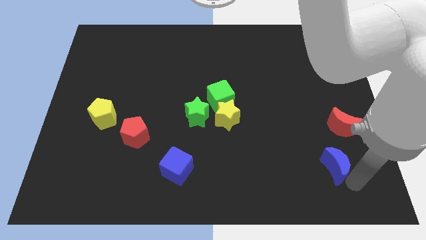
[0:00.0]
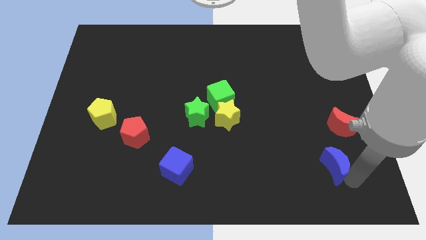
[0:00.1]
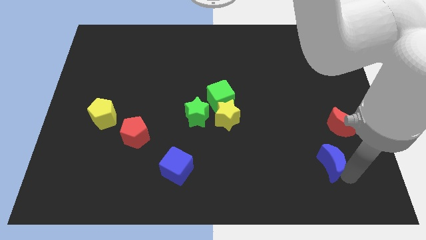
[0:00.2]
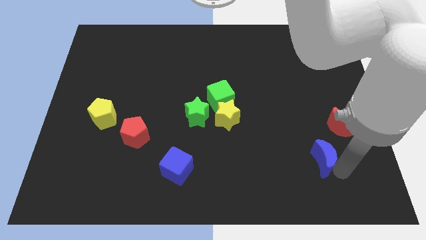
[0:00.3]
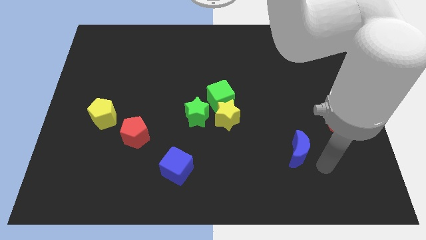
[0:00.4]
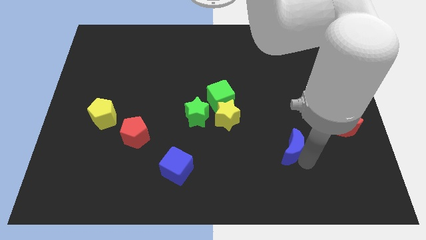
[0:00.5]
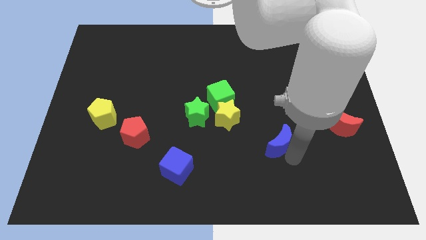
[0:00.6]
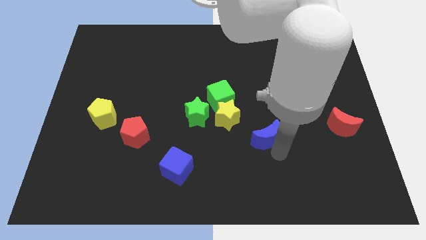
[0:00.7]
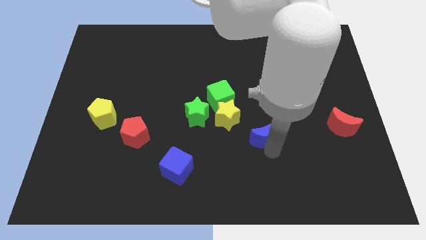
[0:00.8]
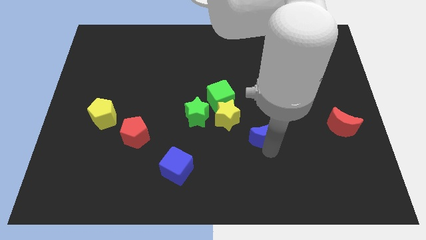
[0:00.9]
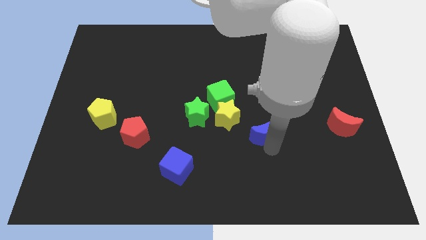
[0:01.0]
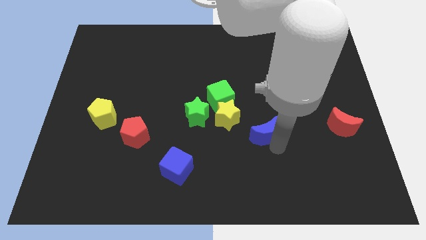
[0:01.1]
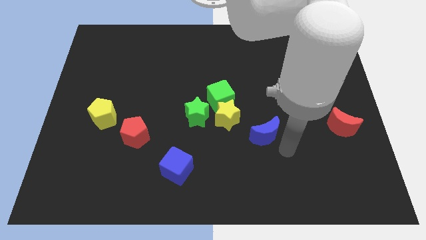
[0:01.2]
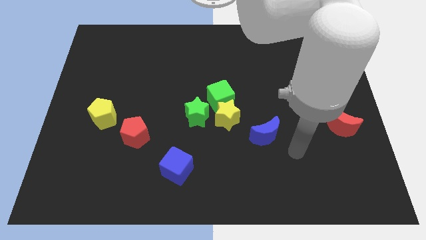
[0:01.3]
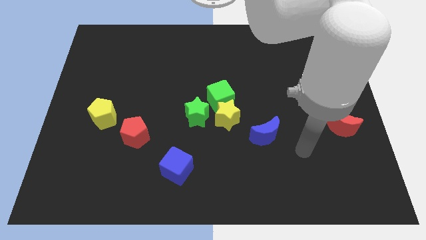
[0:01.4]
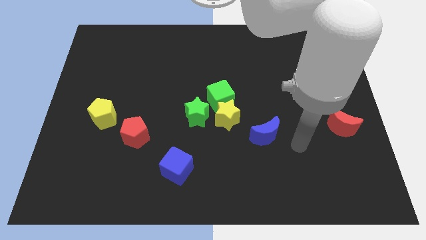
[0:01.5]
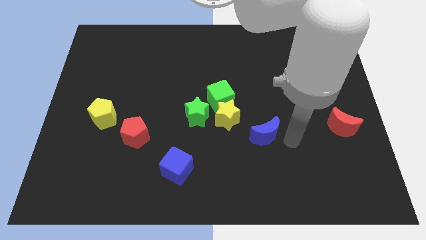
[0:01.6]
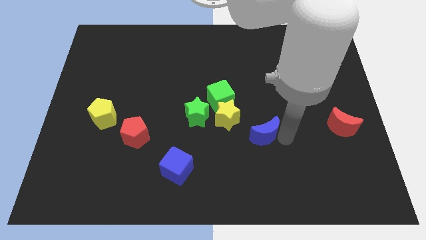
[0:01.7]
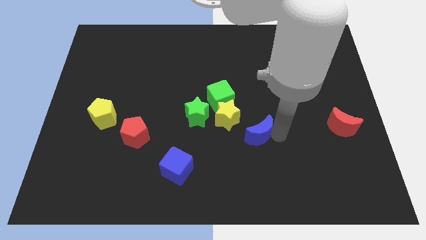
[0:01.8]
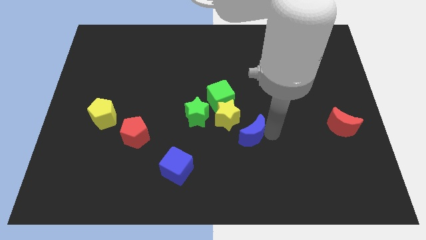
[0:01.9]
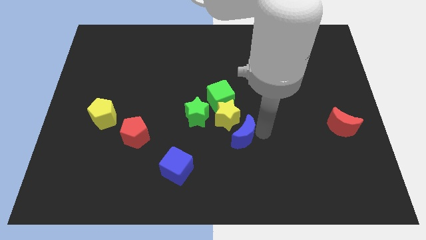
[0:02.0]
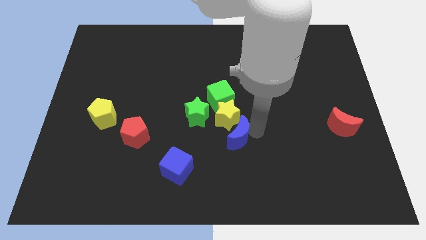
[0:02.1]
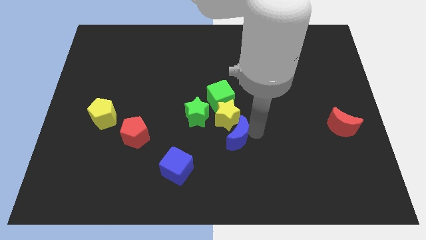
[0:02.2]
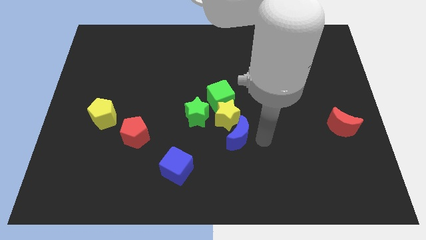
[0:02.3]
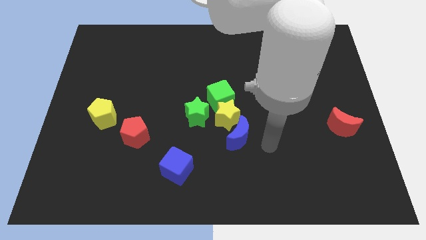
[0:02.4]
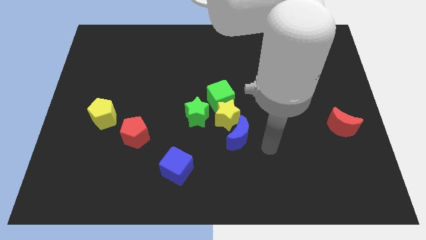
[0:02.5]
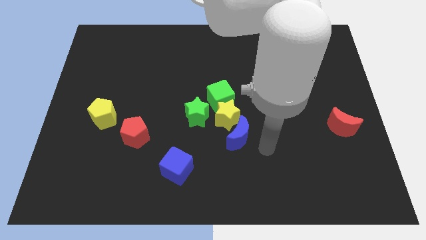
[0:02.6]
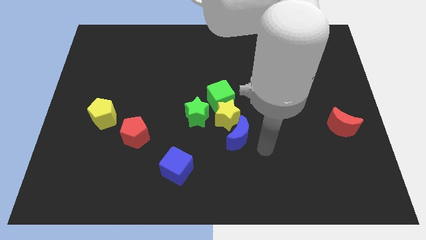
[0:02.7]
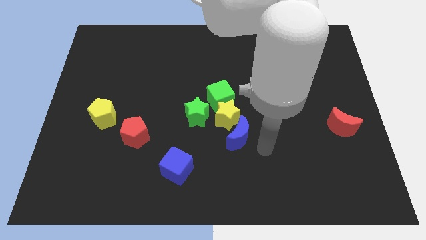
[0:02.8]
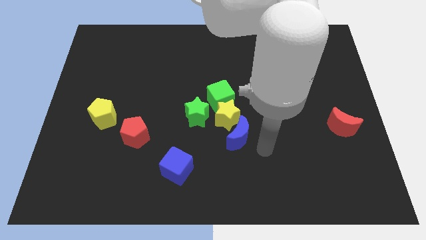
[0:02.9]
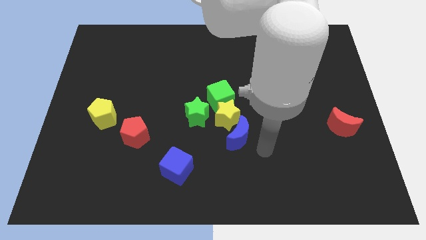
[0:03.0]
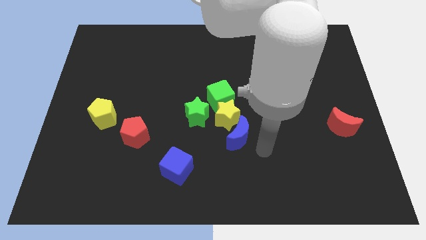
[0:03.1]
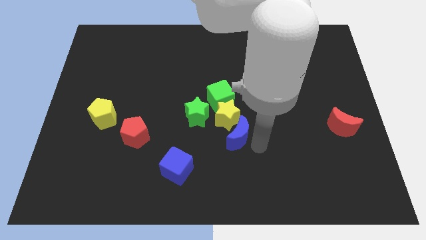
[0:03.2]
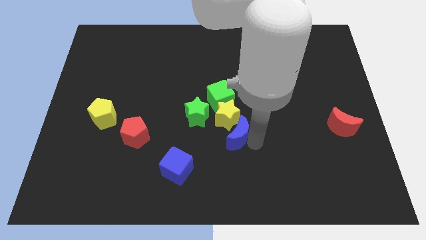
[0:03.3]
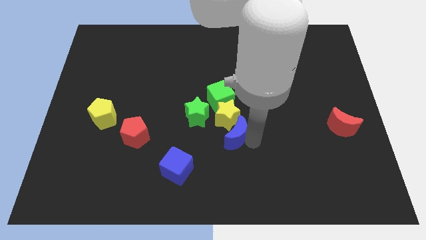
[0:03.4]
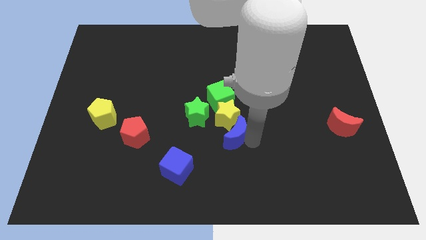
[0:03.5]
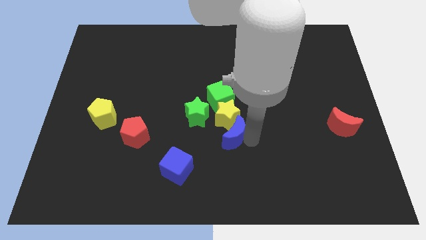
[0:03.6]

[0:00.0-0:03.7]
push the blue moon and place it close to the yellow star

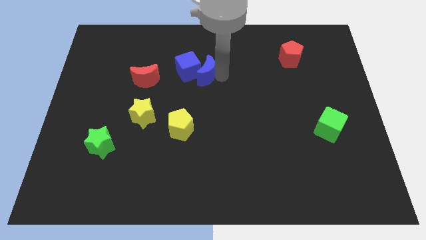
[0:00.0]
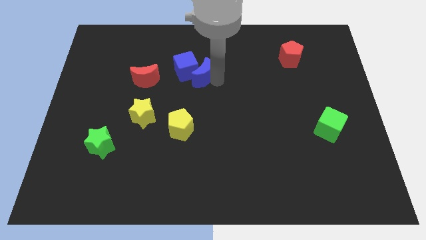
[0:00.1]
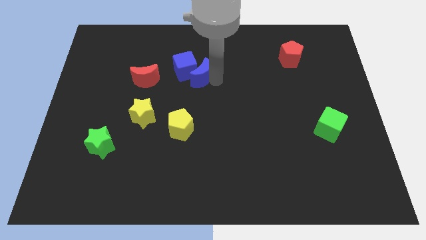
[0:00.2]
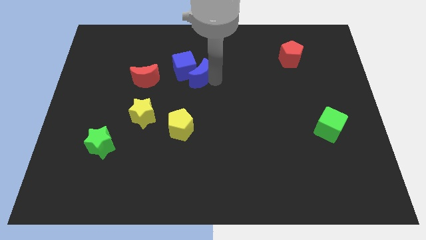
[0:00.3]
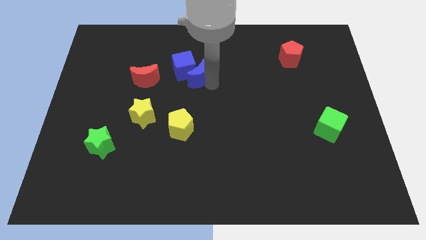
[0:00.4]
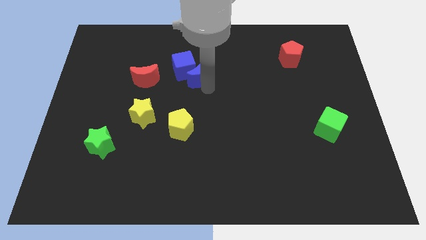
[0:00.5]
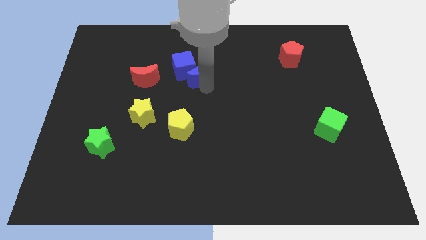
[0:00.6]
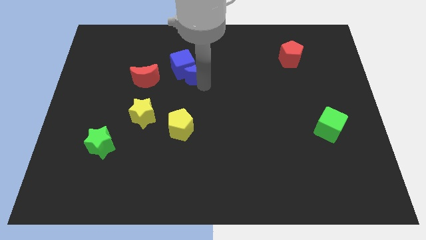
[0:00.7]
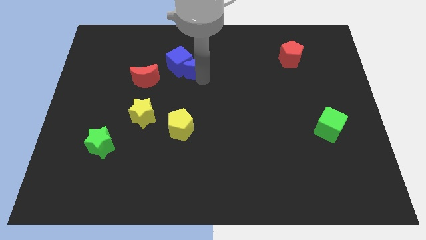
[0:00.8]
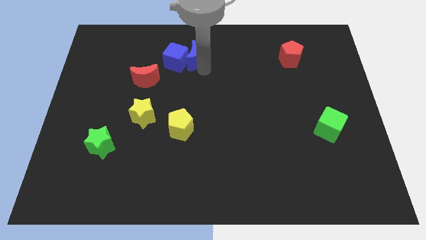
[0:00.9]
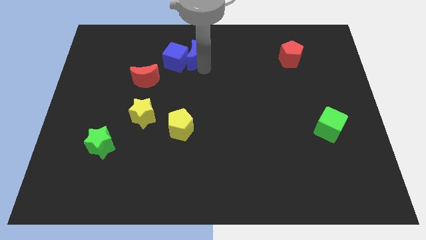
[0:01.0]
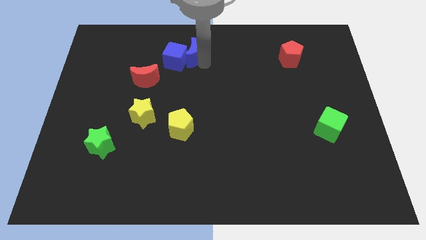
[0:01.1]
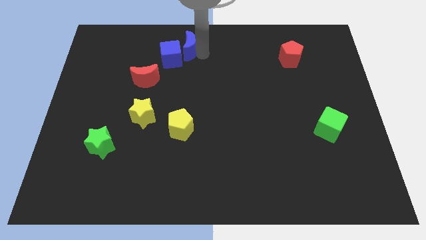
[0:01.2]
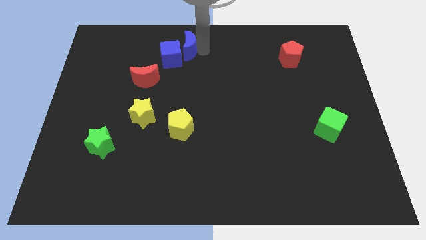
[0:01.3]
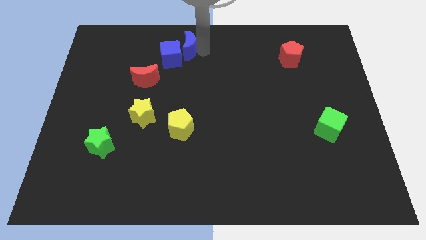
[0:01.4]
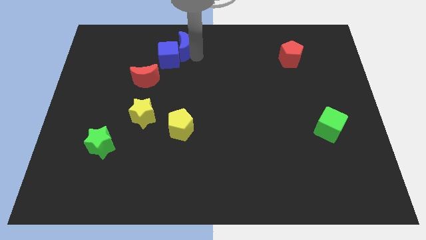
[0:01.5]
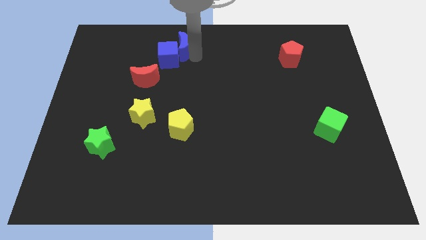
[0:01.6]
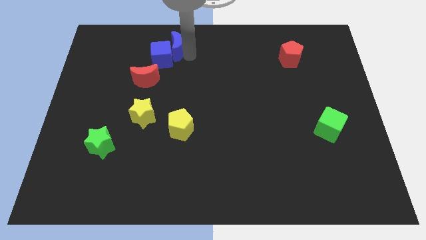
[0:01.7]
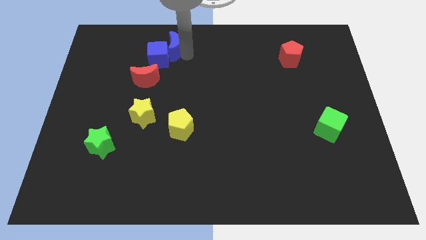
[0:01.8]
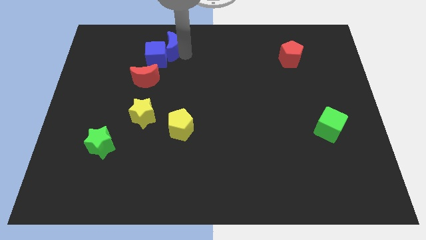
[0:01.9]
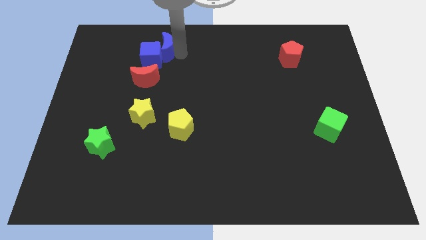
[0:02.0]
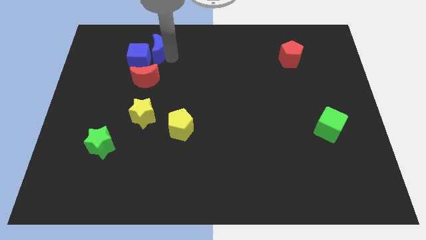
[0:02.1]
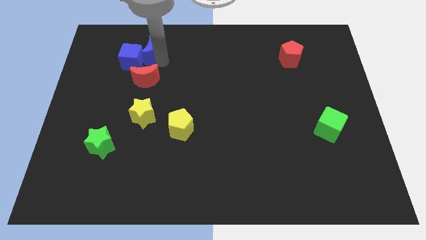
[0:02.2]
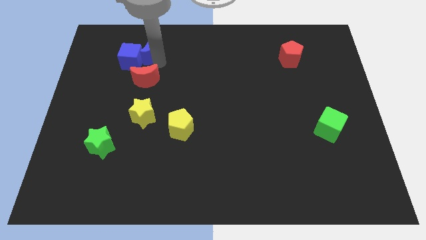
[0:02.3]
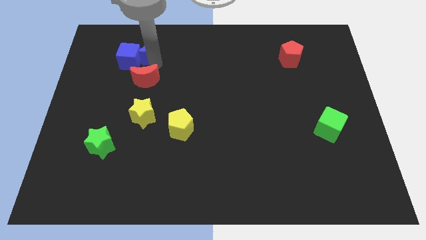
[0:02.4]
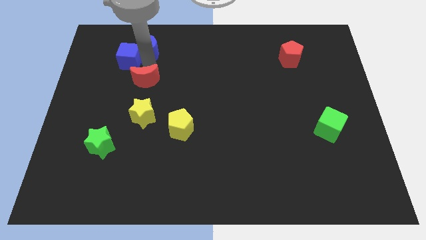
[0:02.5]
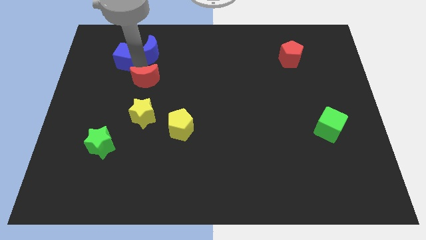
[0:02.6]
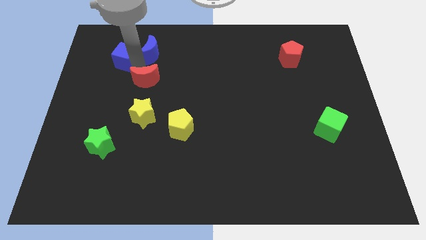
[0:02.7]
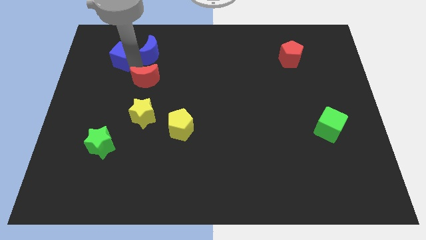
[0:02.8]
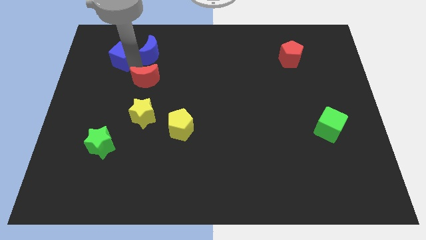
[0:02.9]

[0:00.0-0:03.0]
move the blue blocks to the top of the red crescent

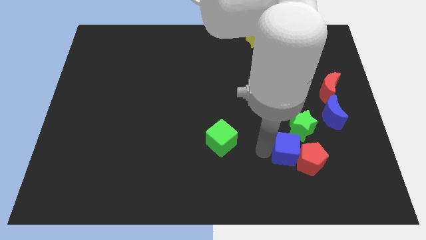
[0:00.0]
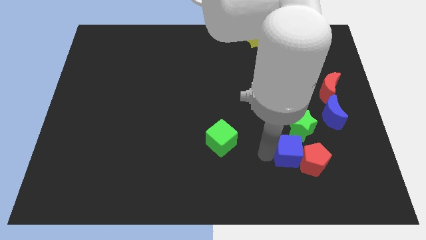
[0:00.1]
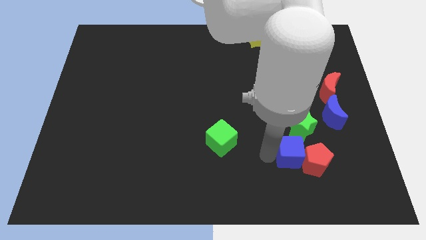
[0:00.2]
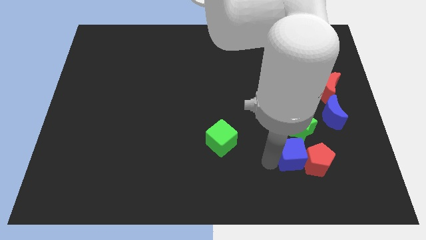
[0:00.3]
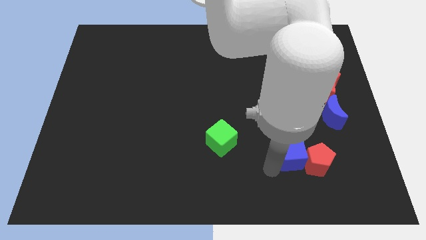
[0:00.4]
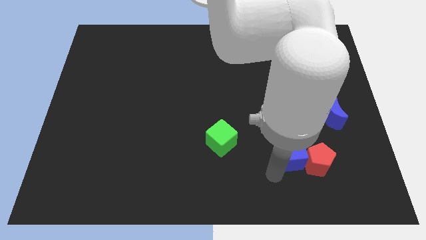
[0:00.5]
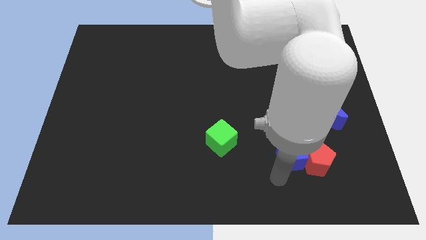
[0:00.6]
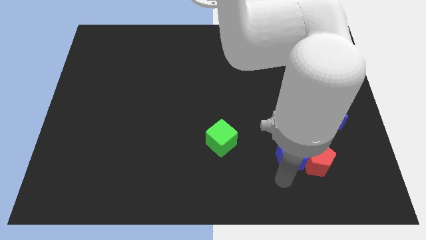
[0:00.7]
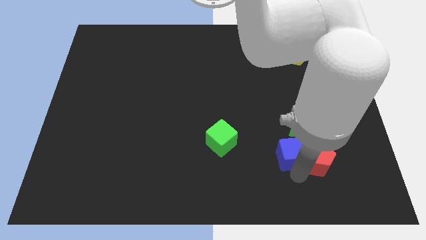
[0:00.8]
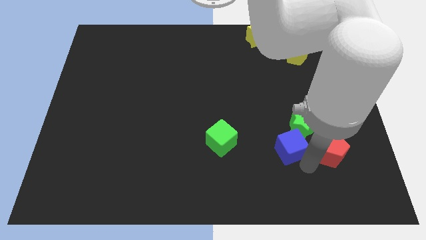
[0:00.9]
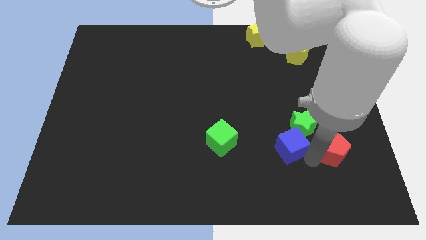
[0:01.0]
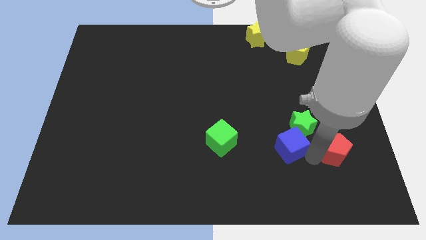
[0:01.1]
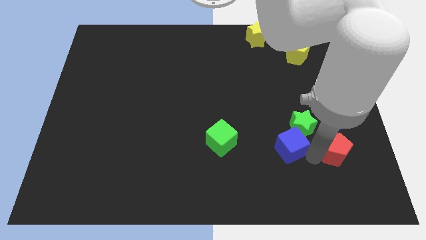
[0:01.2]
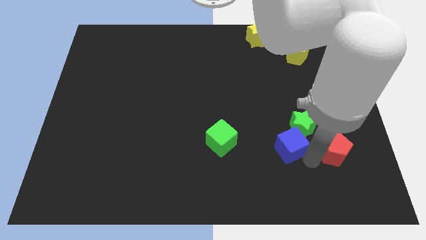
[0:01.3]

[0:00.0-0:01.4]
place your hand in between the blue cube and the red pentagon

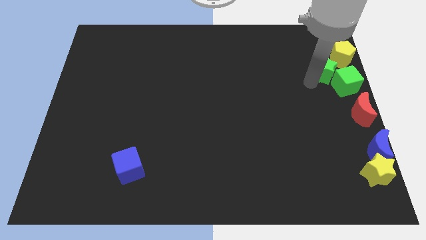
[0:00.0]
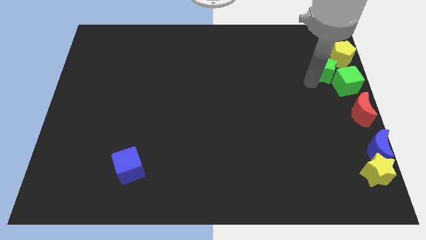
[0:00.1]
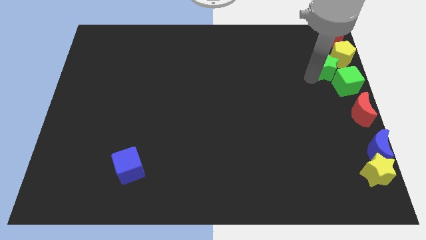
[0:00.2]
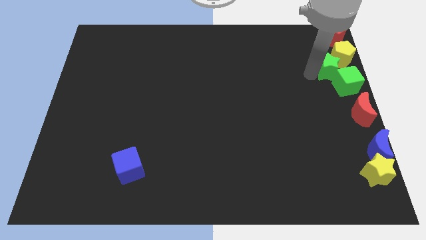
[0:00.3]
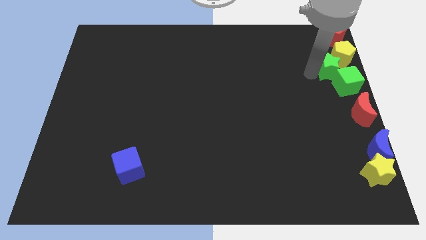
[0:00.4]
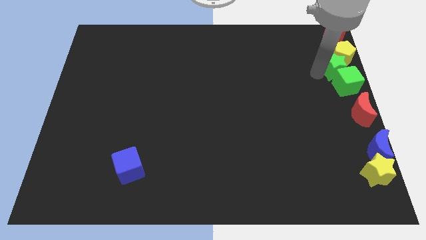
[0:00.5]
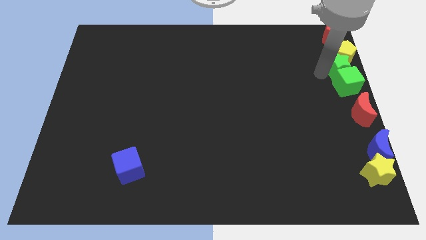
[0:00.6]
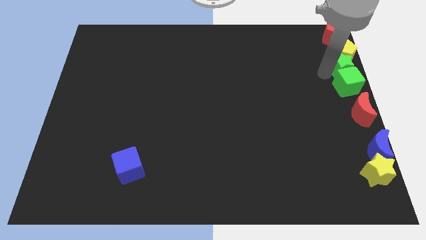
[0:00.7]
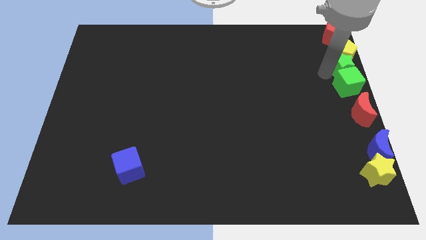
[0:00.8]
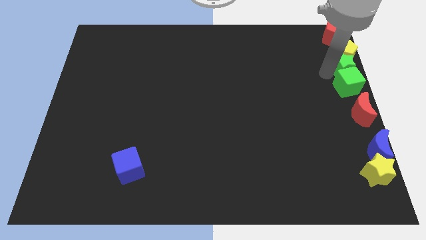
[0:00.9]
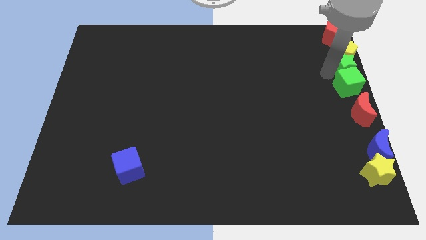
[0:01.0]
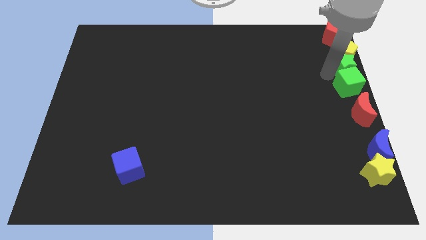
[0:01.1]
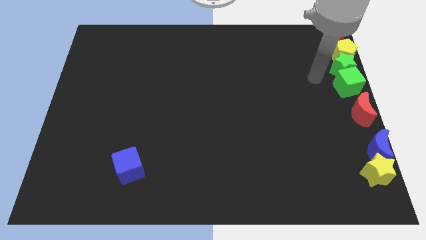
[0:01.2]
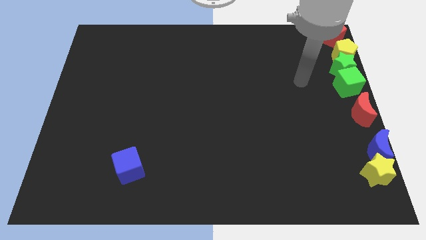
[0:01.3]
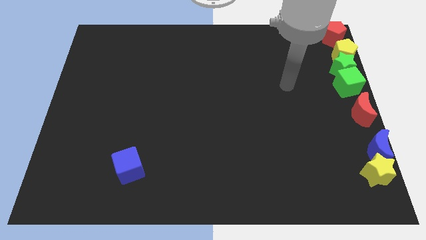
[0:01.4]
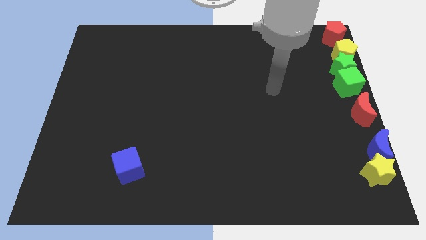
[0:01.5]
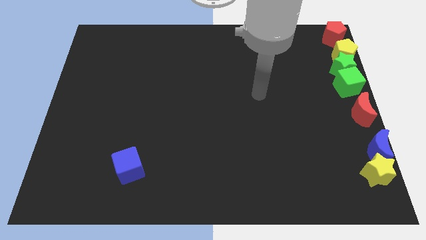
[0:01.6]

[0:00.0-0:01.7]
place the green star in between the yellow pentagon and the green cube
